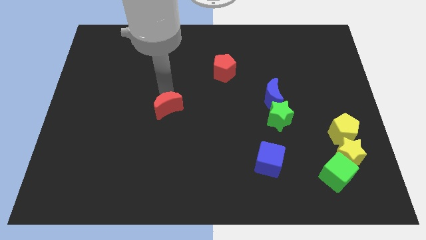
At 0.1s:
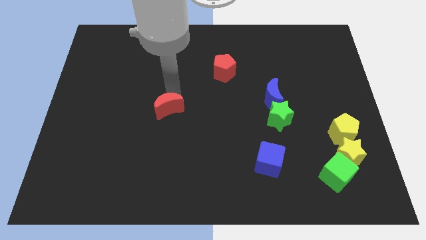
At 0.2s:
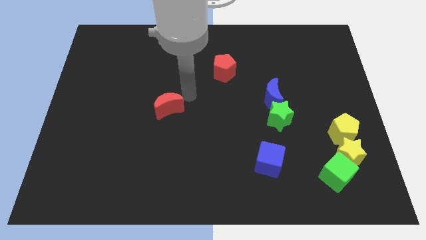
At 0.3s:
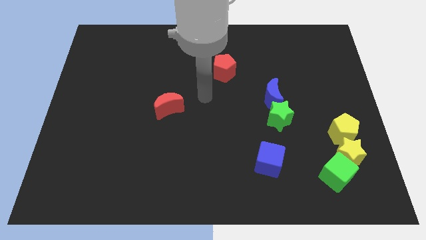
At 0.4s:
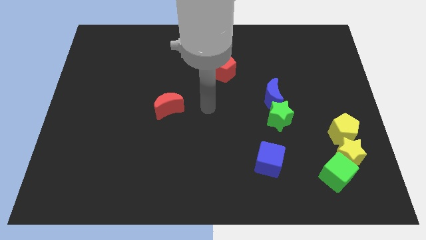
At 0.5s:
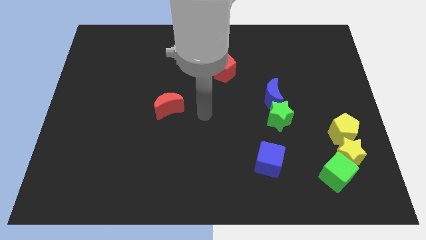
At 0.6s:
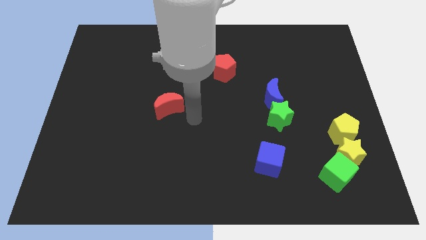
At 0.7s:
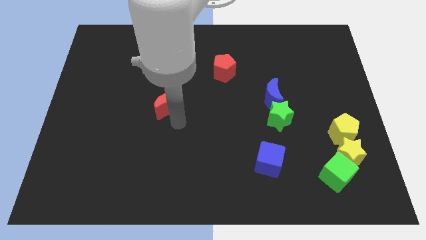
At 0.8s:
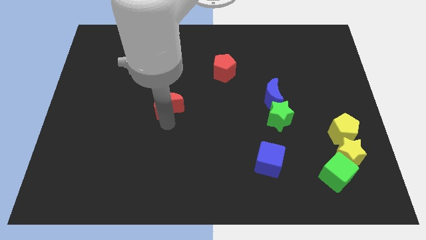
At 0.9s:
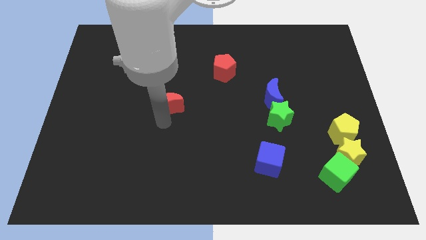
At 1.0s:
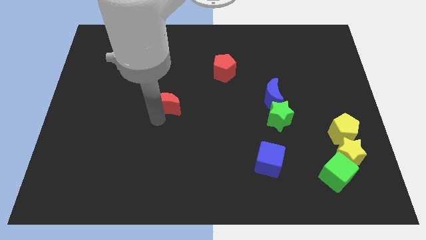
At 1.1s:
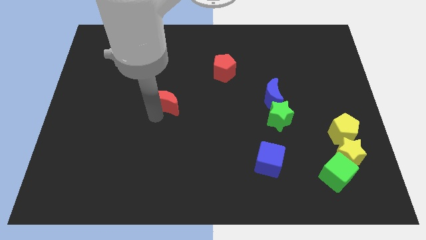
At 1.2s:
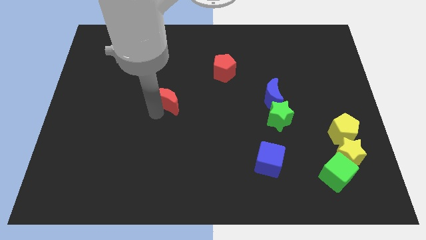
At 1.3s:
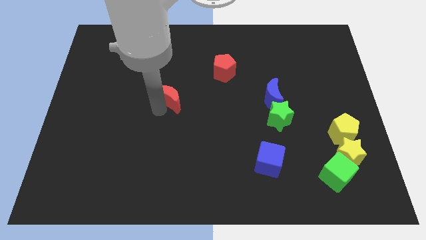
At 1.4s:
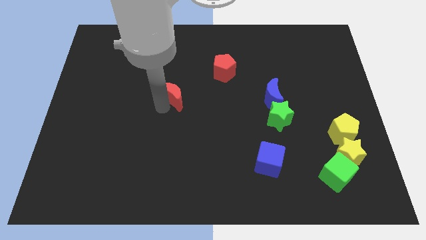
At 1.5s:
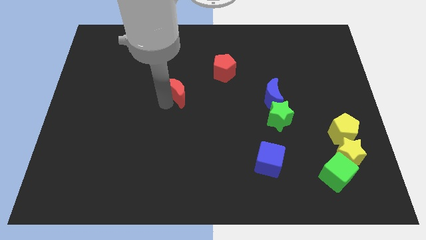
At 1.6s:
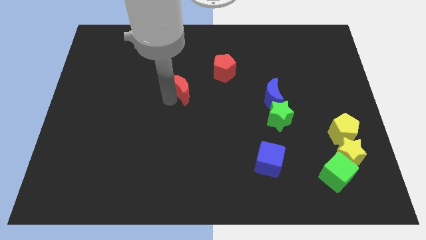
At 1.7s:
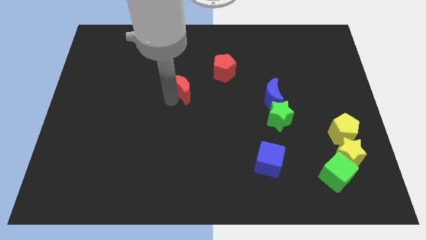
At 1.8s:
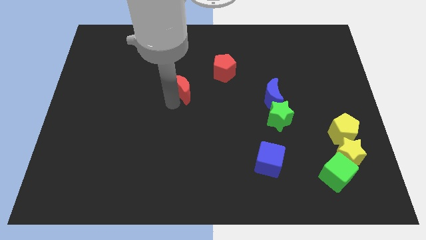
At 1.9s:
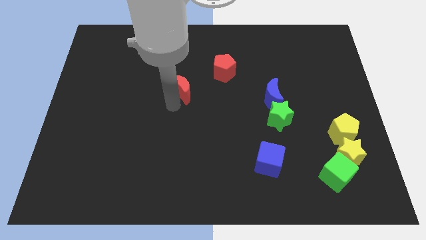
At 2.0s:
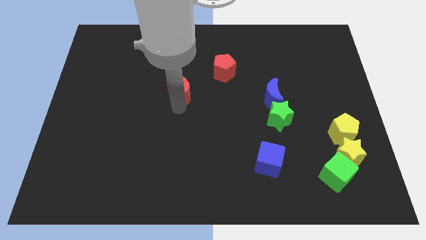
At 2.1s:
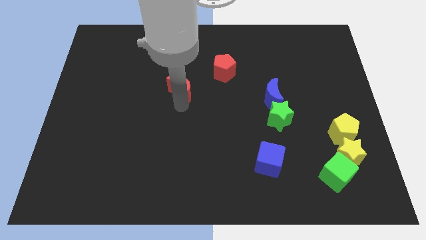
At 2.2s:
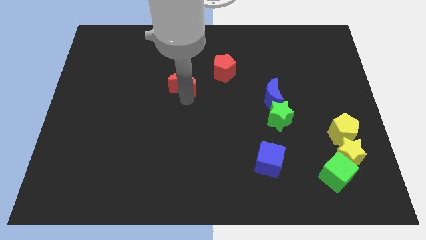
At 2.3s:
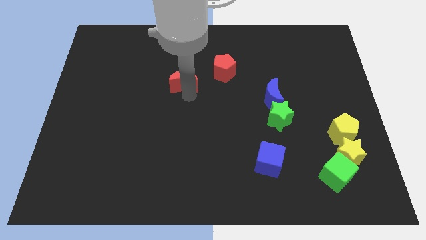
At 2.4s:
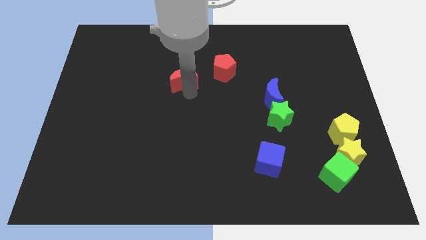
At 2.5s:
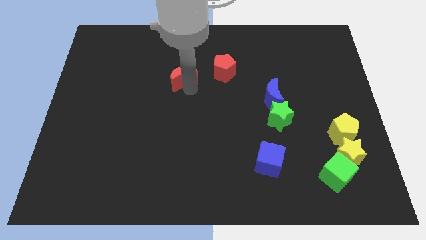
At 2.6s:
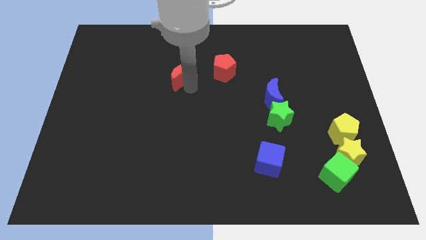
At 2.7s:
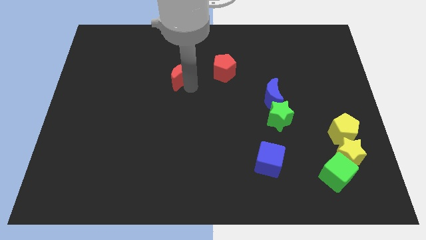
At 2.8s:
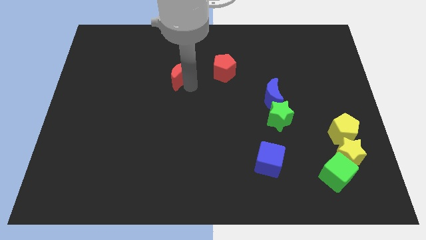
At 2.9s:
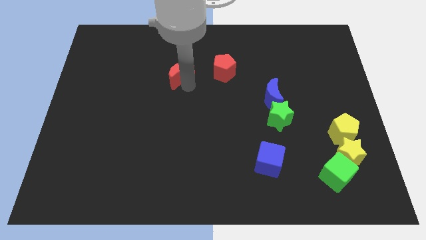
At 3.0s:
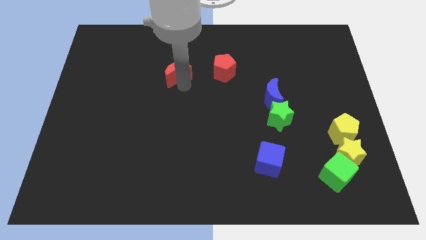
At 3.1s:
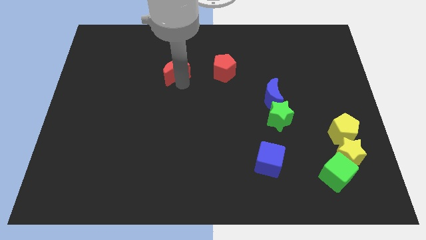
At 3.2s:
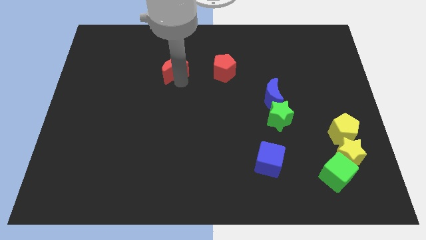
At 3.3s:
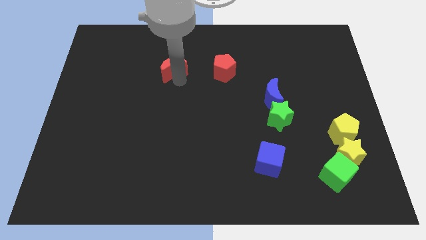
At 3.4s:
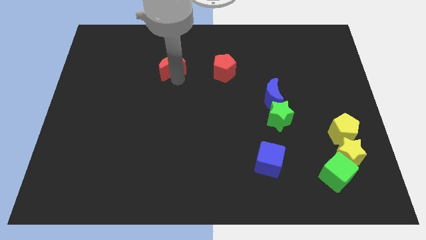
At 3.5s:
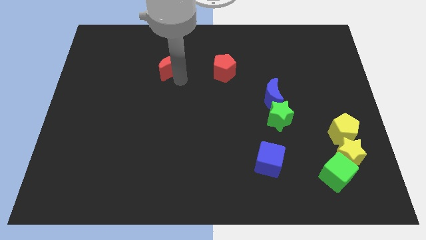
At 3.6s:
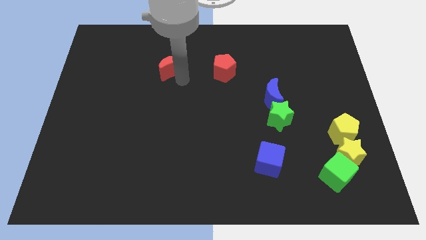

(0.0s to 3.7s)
push the red crescent to the left of red pentagon

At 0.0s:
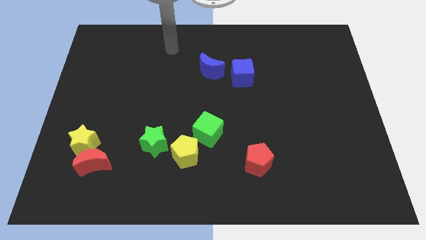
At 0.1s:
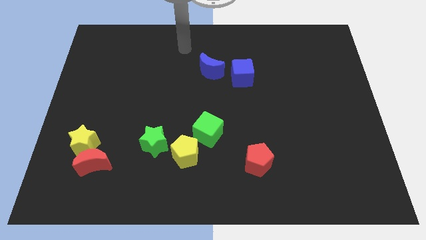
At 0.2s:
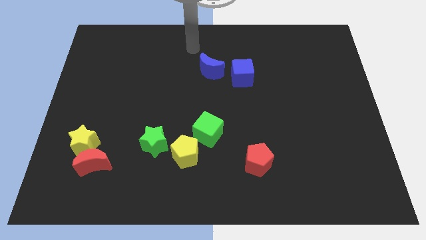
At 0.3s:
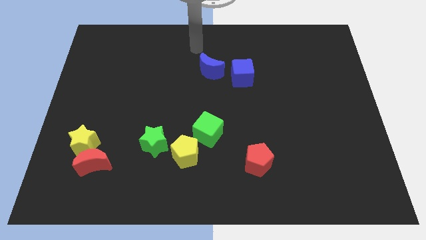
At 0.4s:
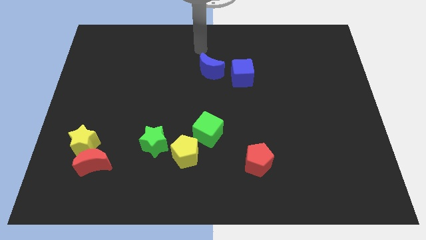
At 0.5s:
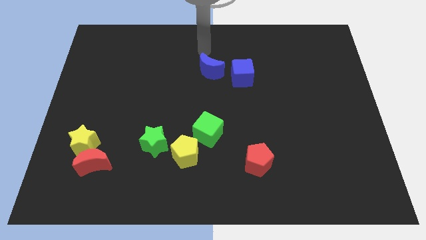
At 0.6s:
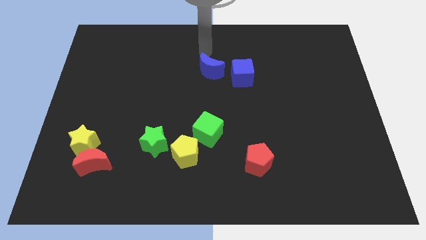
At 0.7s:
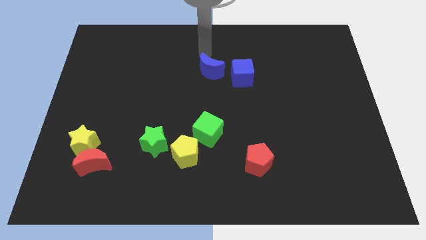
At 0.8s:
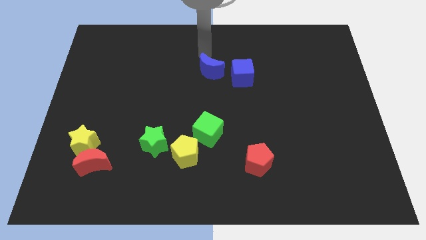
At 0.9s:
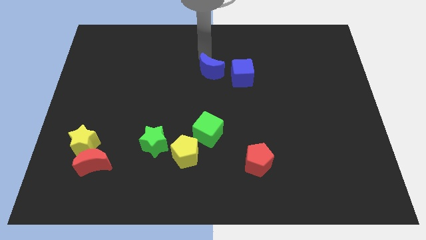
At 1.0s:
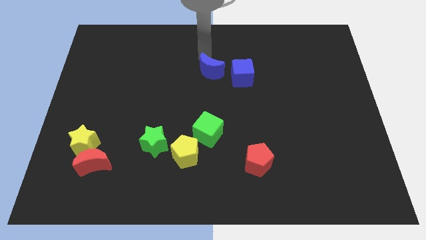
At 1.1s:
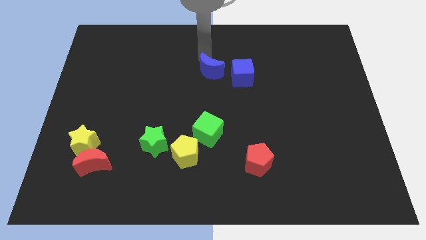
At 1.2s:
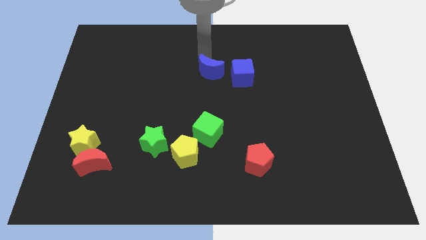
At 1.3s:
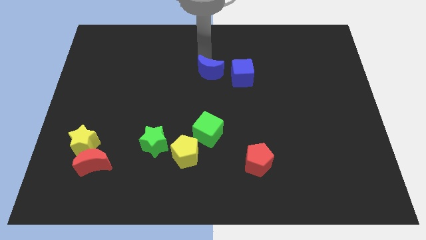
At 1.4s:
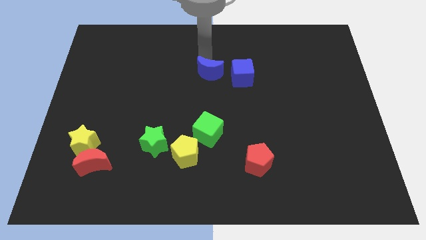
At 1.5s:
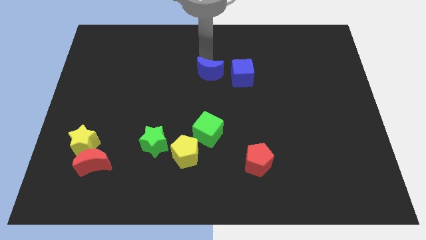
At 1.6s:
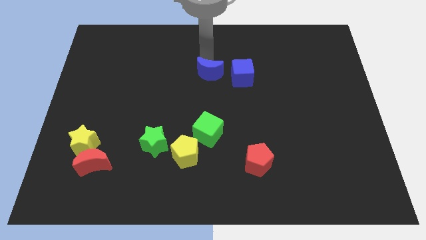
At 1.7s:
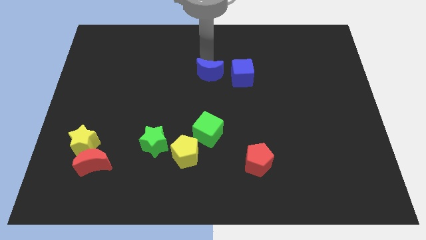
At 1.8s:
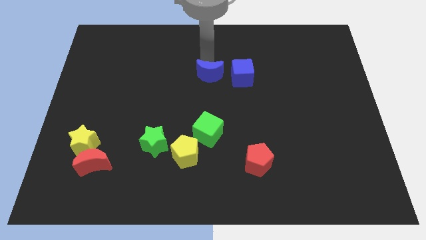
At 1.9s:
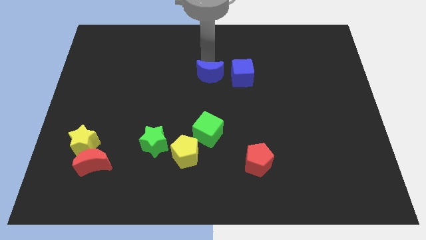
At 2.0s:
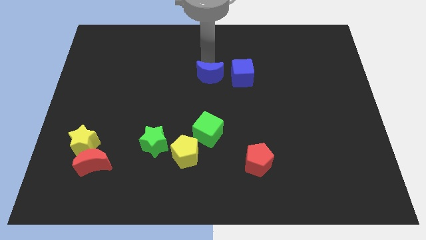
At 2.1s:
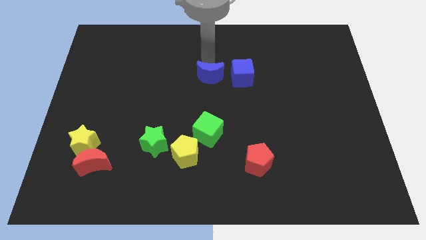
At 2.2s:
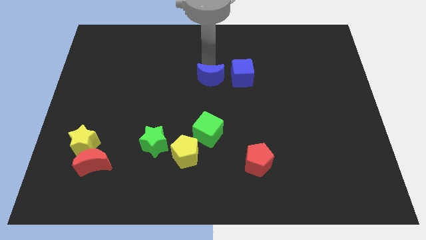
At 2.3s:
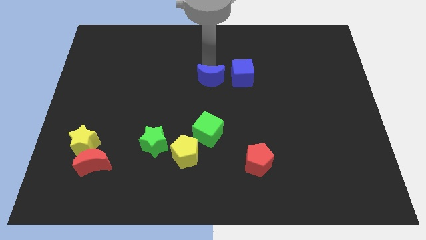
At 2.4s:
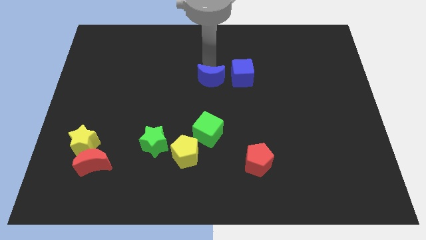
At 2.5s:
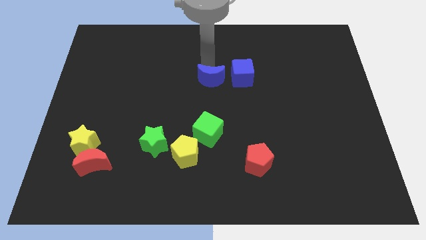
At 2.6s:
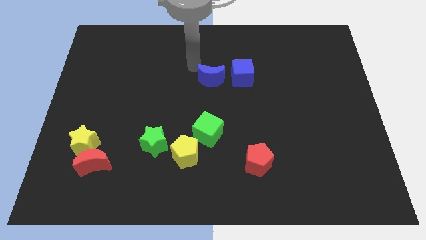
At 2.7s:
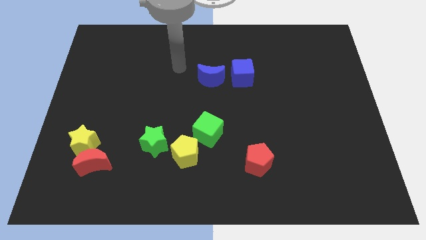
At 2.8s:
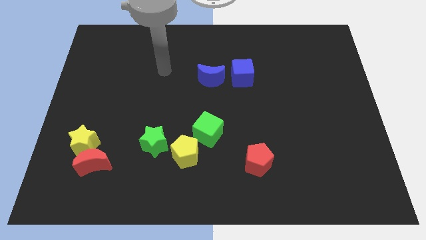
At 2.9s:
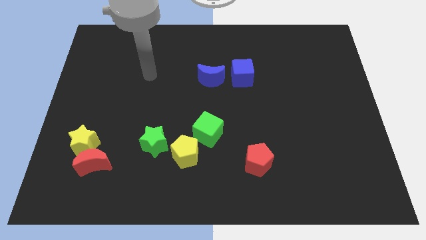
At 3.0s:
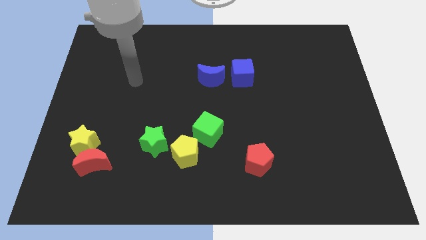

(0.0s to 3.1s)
push blue moon slightly to the down

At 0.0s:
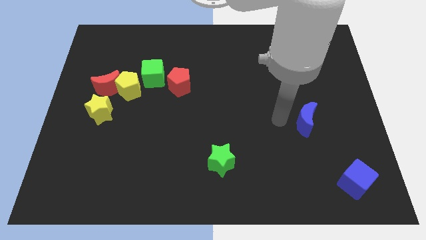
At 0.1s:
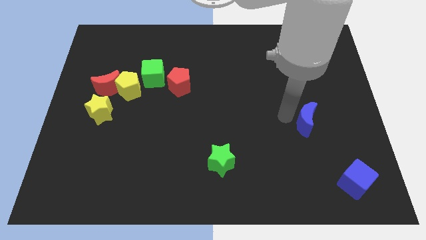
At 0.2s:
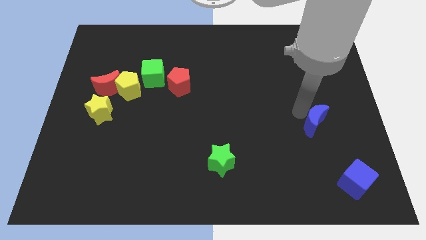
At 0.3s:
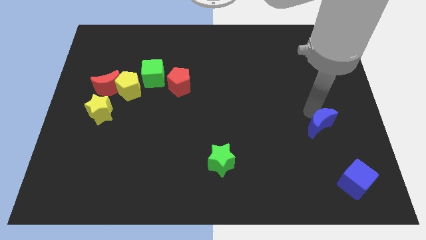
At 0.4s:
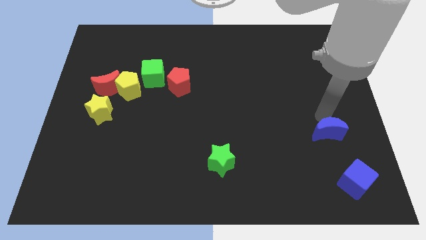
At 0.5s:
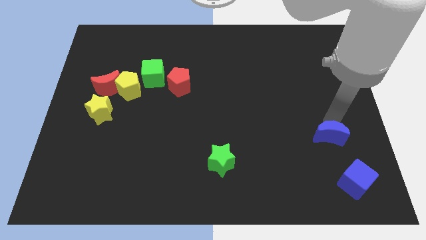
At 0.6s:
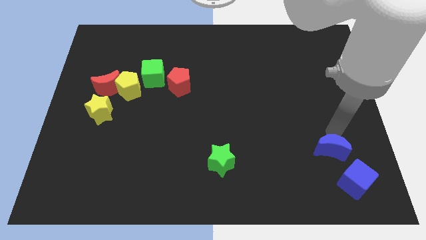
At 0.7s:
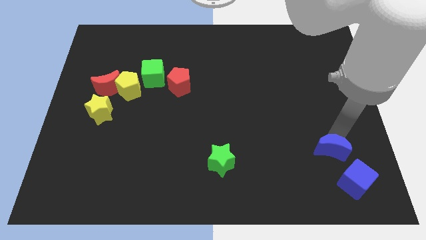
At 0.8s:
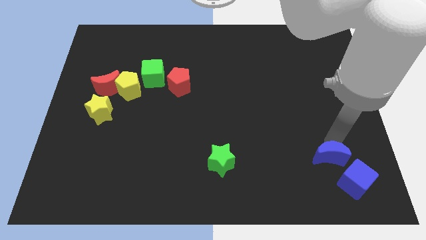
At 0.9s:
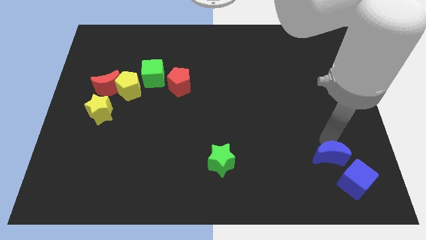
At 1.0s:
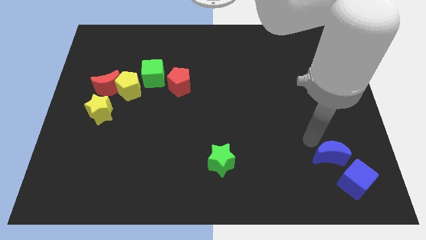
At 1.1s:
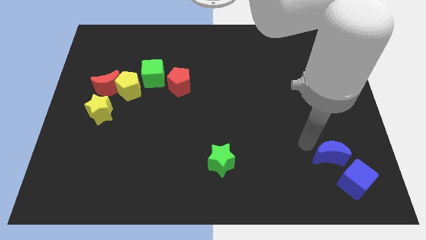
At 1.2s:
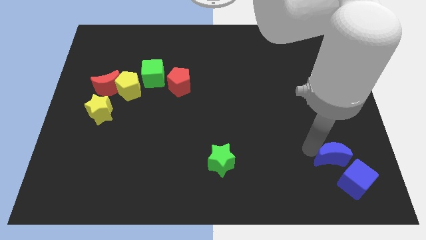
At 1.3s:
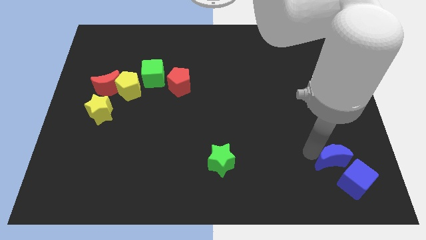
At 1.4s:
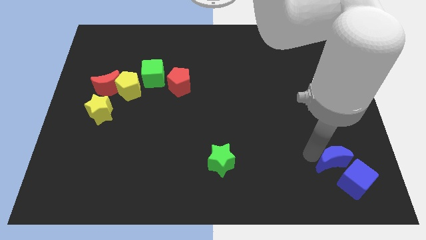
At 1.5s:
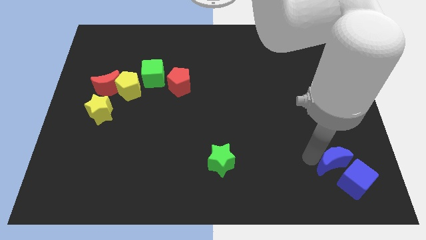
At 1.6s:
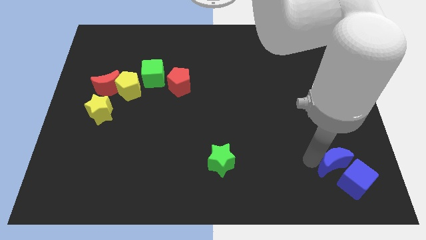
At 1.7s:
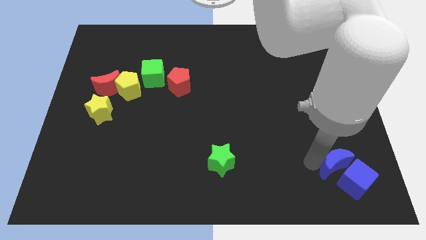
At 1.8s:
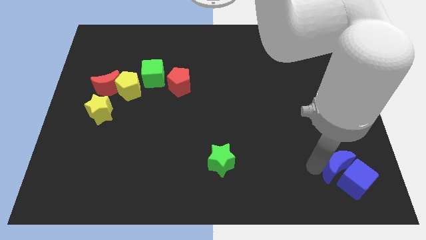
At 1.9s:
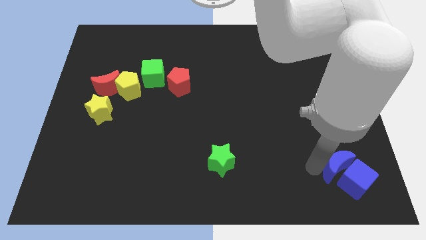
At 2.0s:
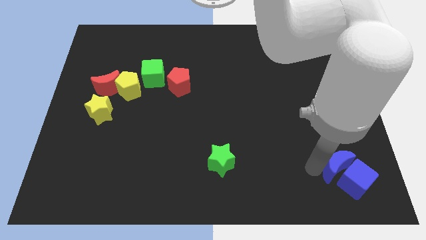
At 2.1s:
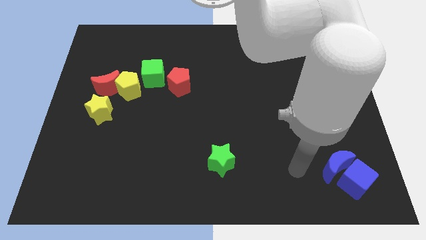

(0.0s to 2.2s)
push blue moon to the blue cube
